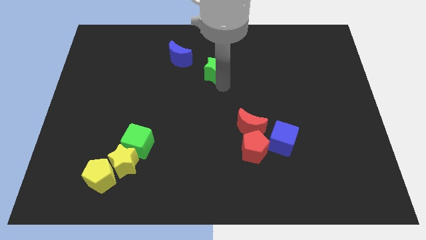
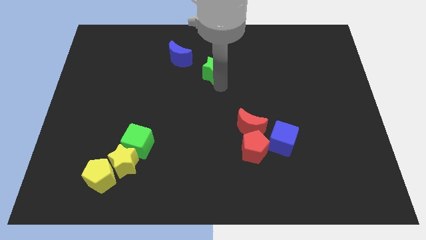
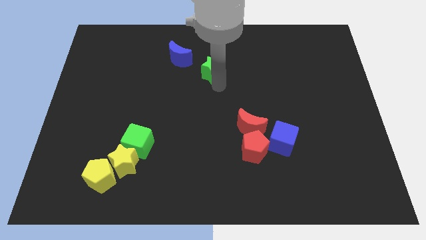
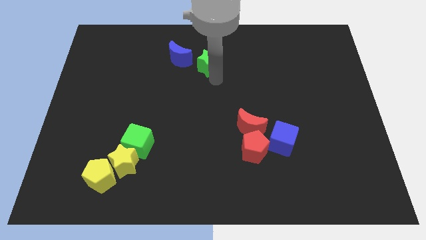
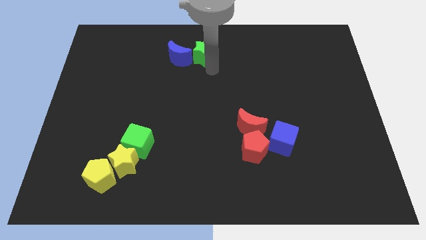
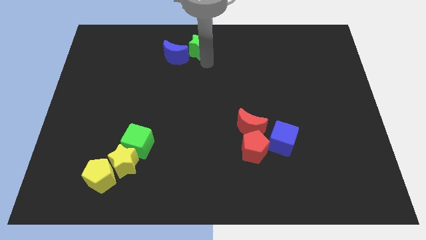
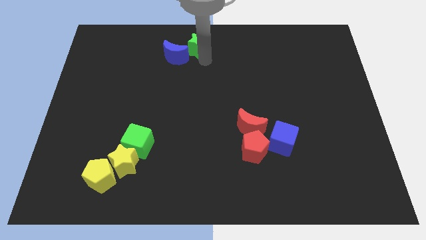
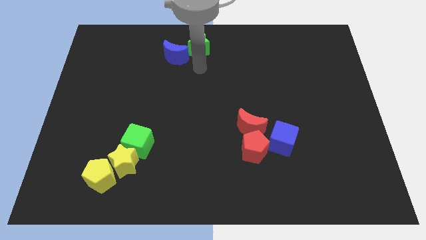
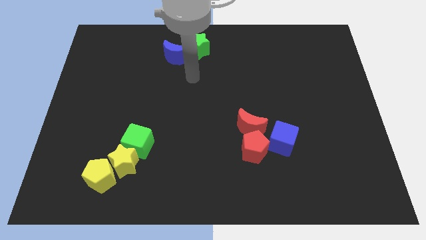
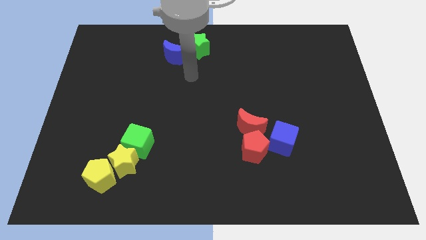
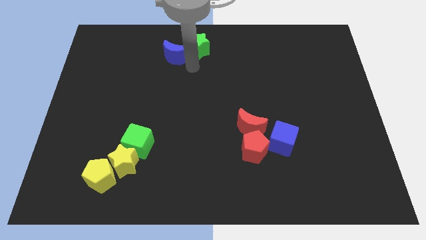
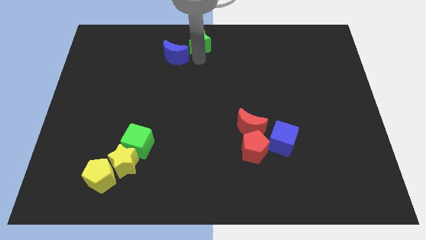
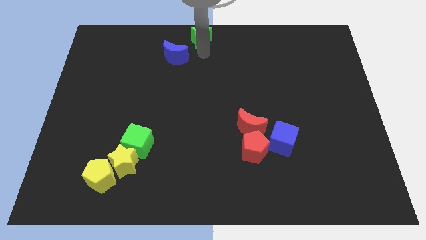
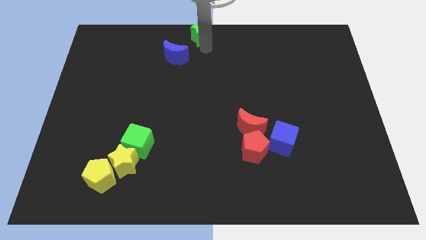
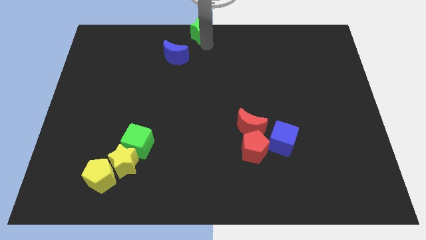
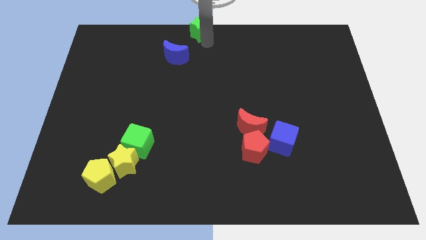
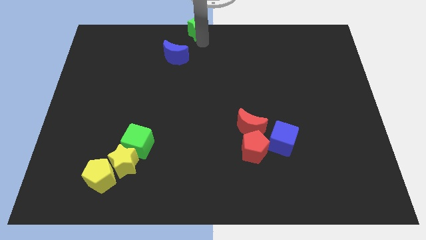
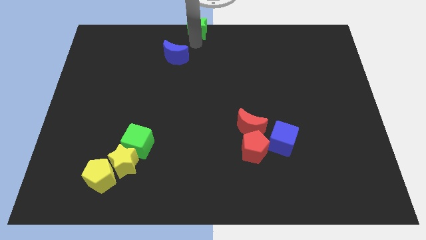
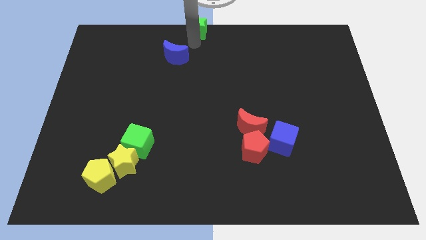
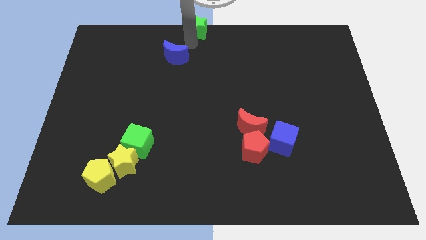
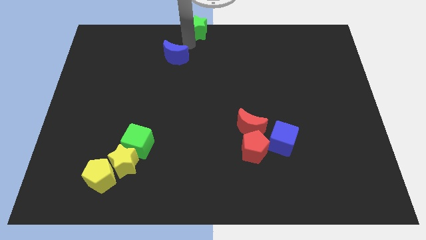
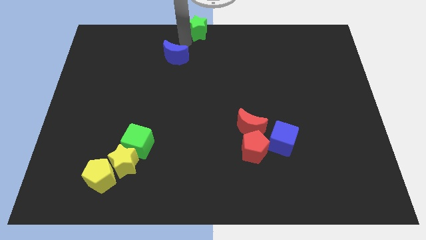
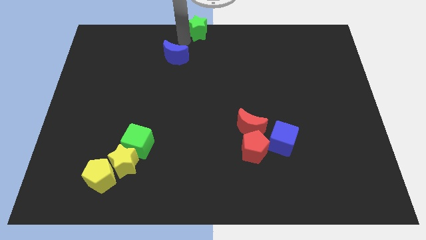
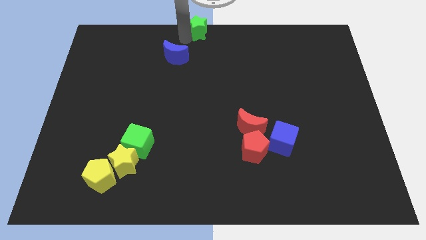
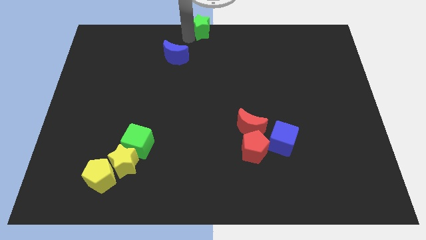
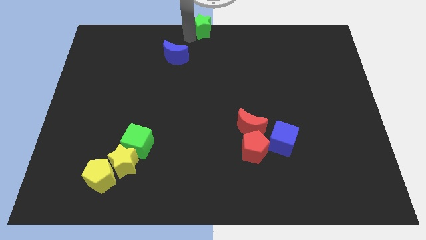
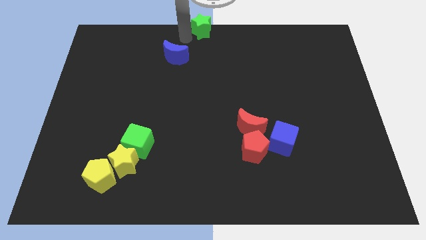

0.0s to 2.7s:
place the green star at the top center

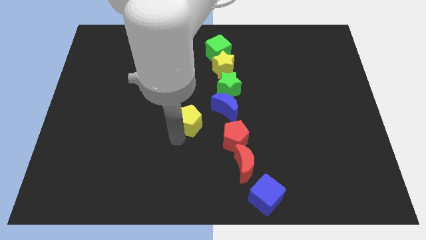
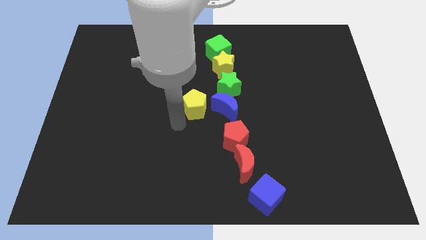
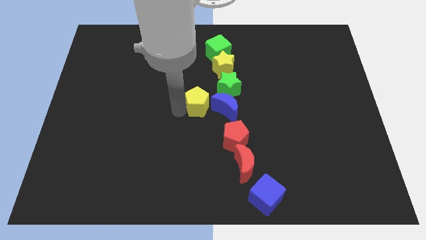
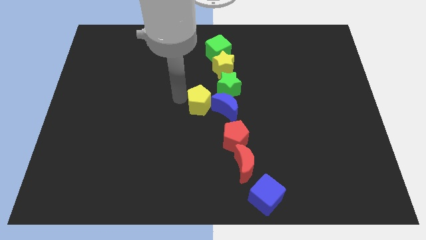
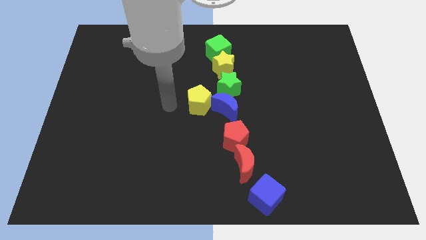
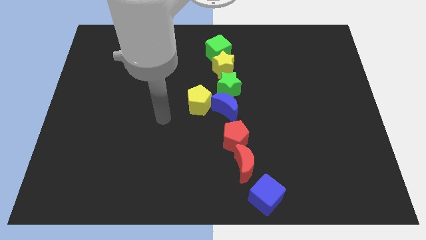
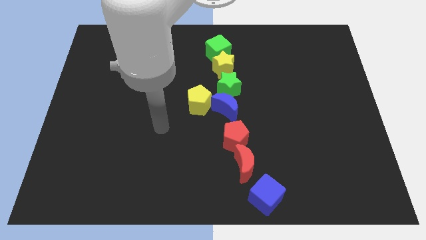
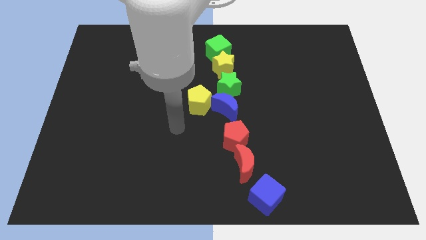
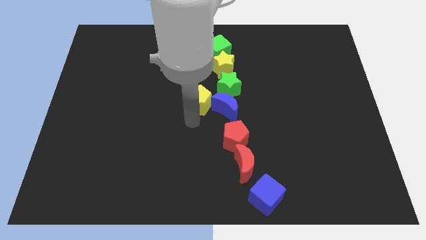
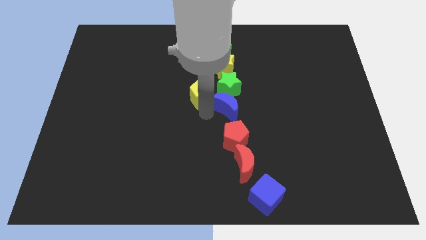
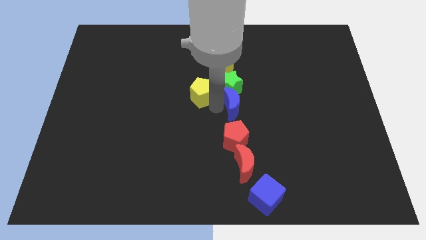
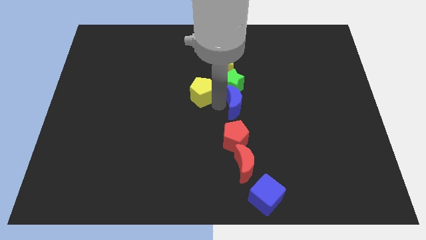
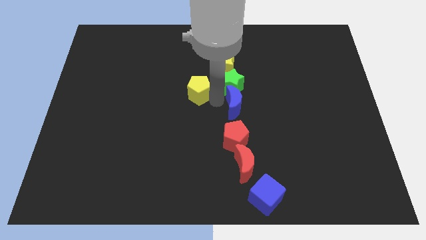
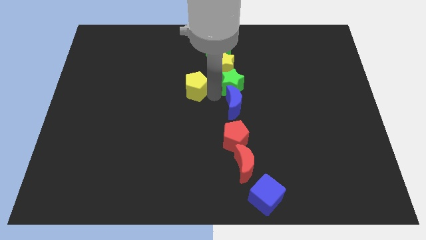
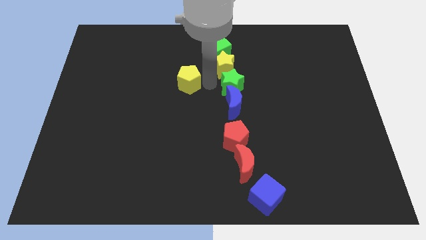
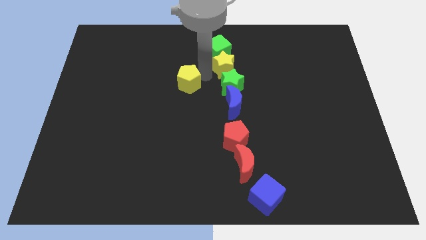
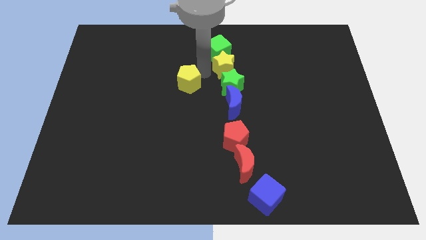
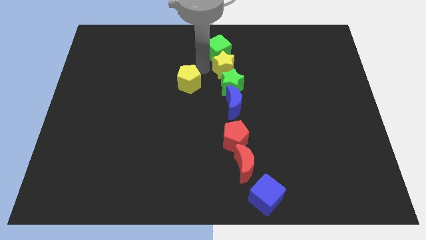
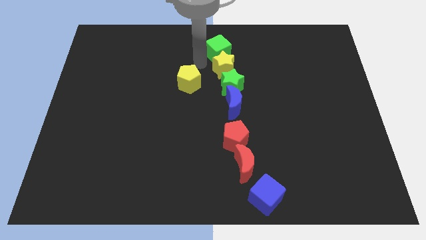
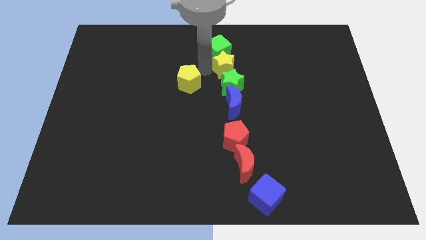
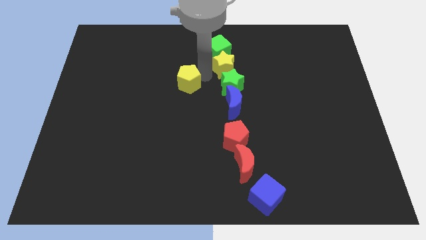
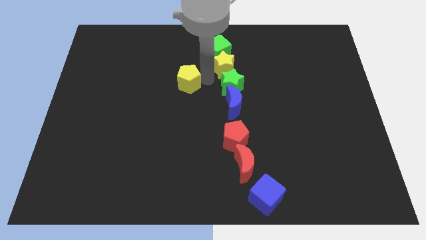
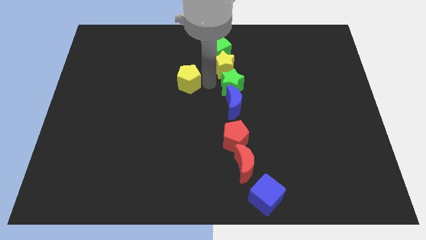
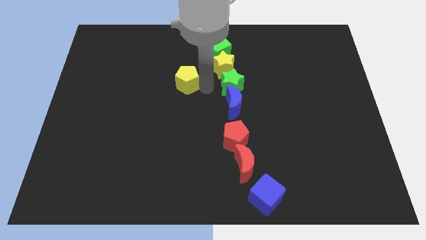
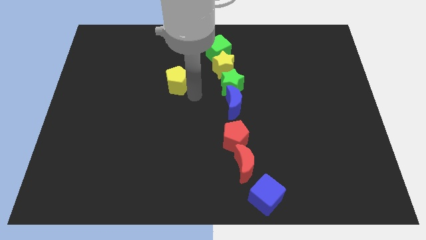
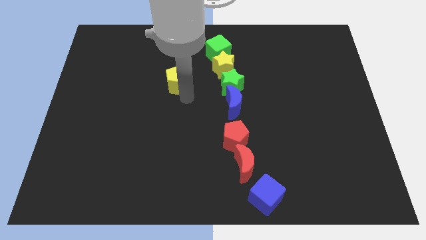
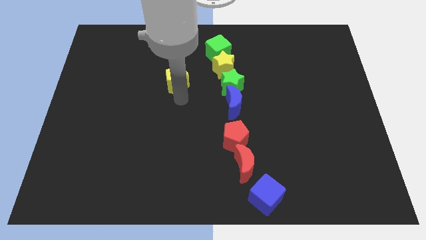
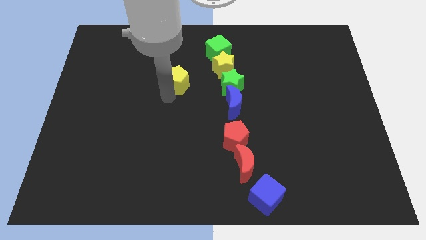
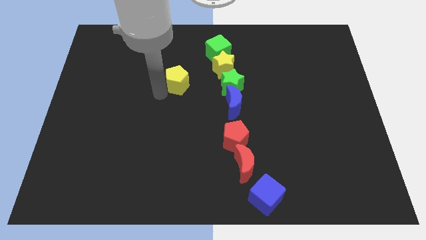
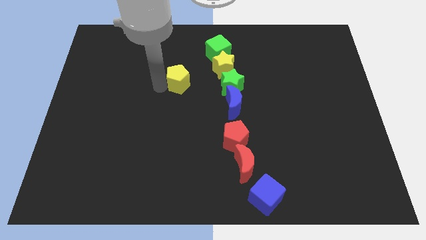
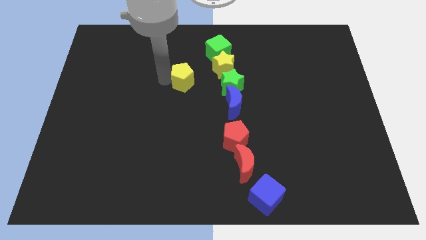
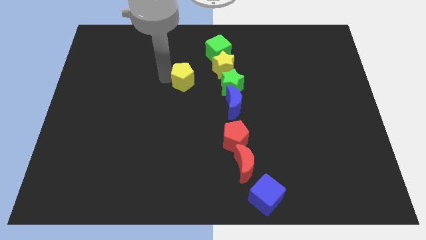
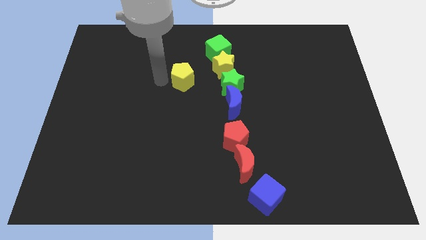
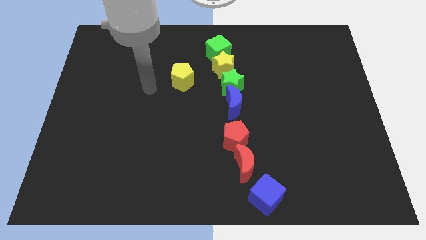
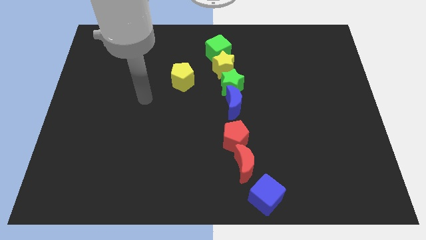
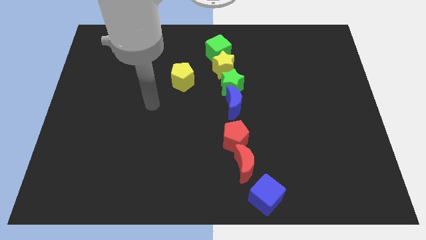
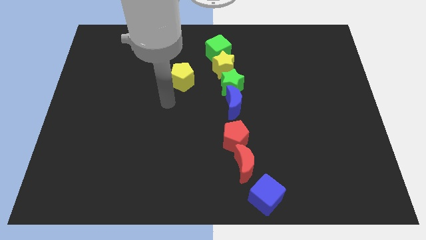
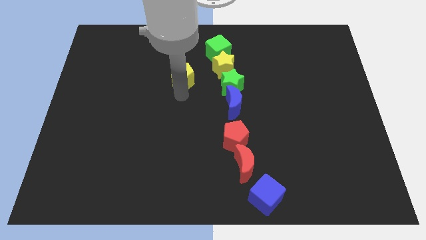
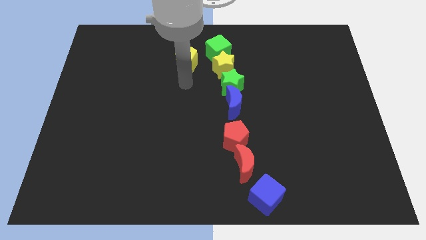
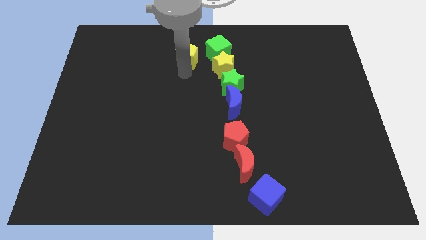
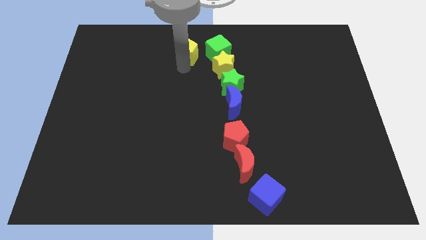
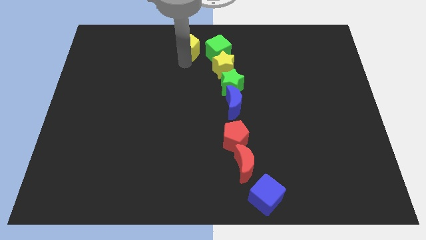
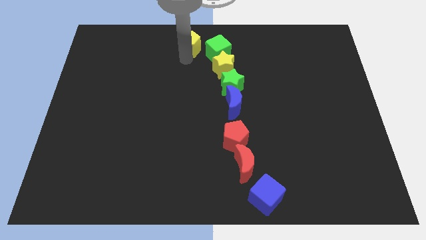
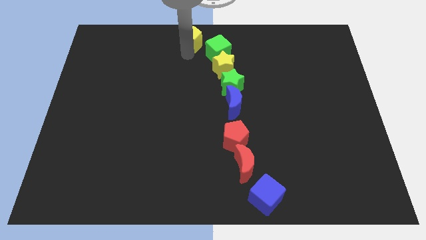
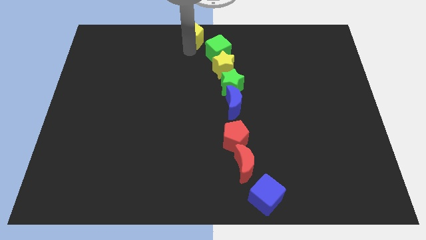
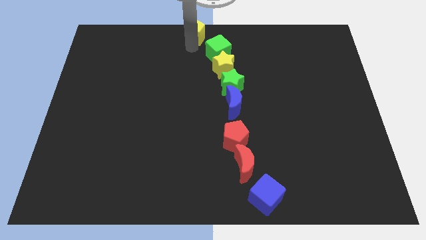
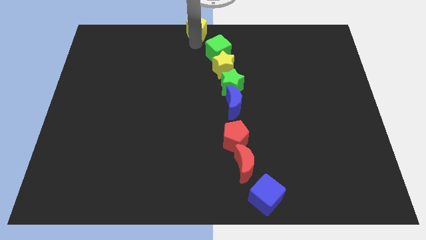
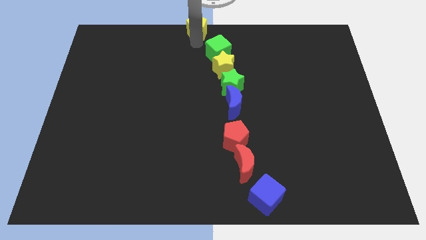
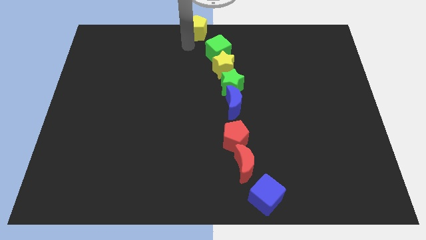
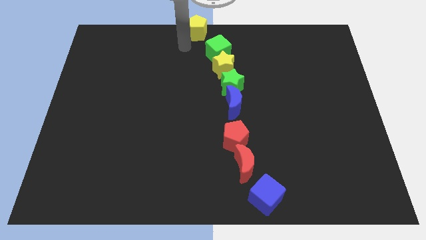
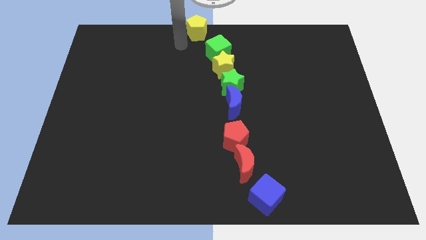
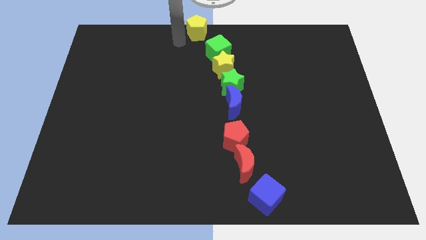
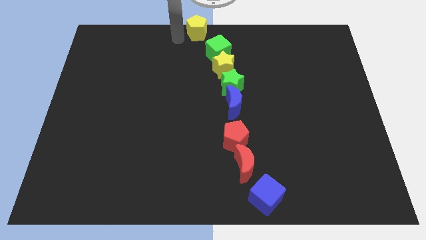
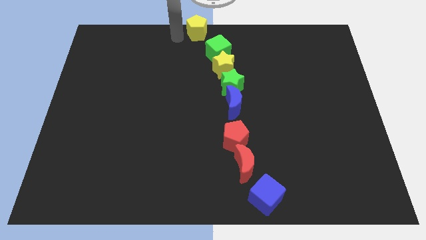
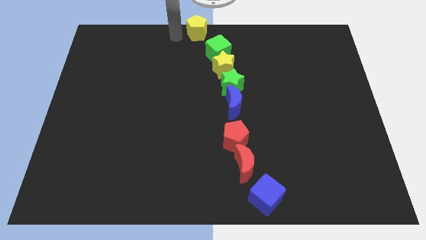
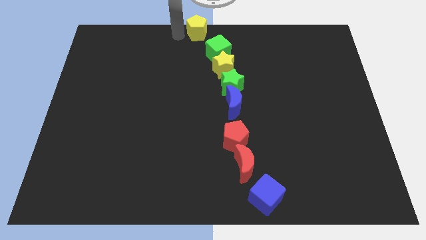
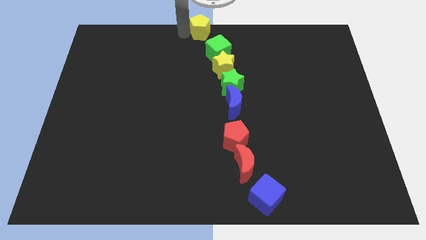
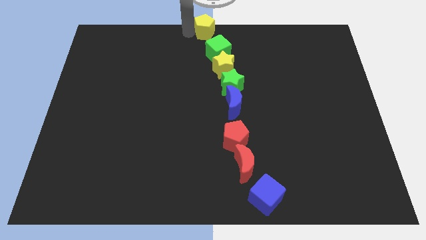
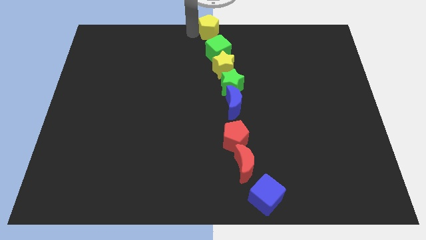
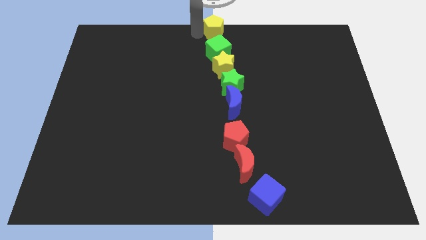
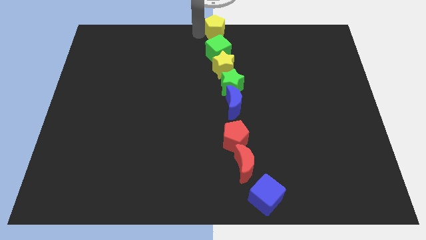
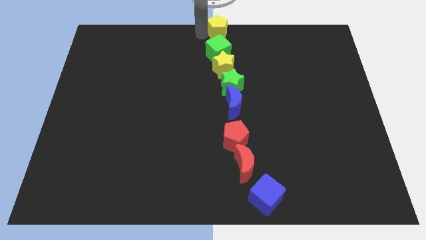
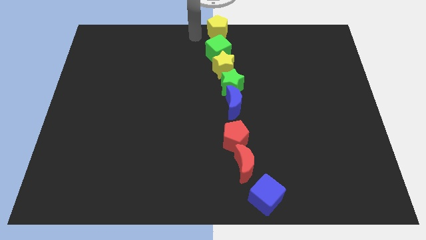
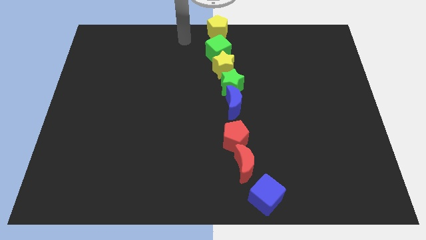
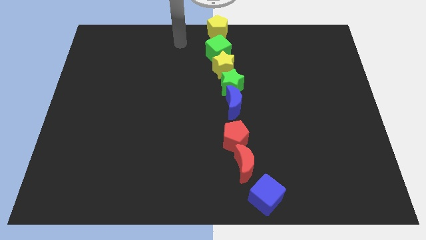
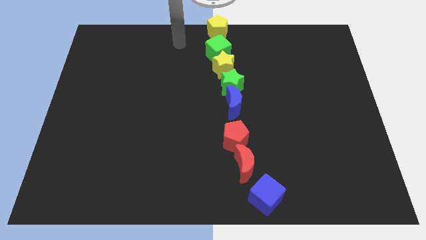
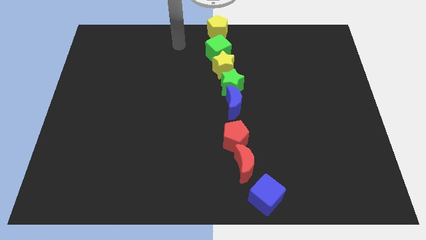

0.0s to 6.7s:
place the yellow pentagon at the top center to form a vertical line with the group of blocks
